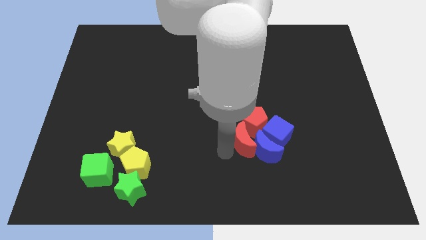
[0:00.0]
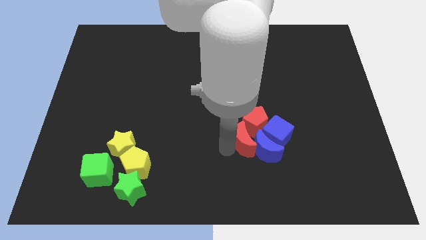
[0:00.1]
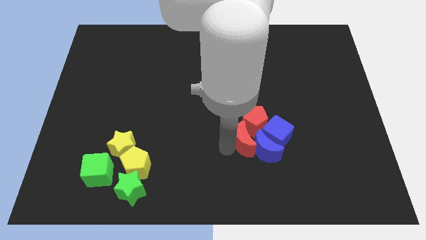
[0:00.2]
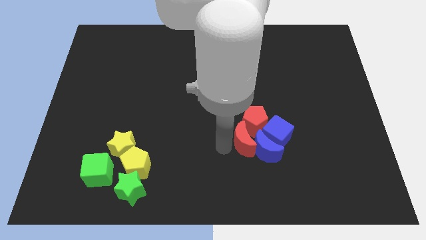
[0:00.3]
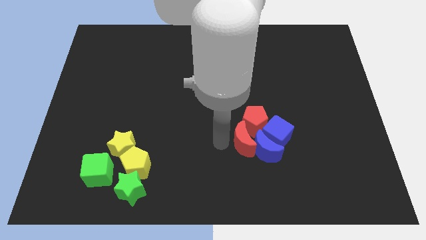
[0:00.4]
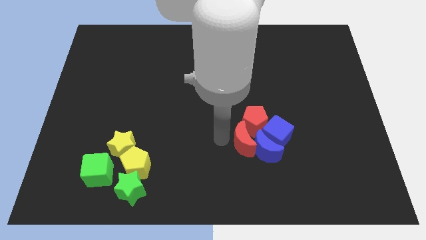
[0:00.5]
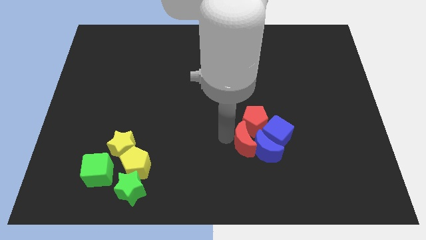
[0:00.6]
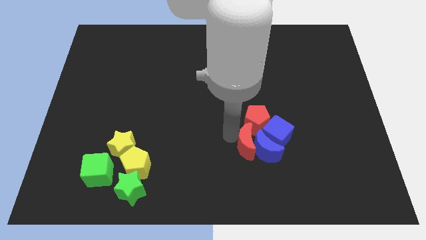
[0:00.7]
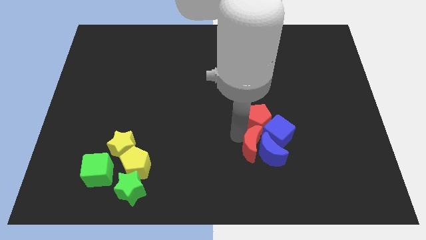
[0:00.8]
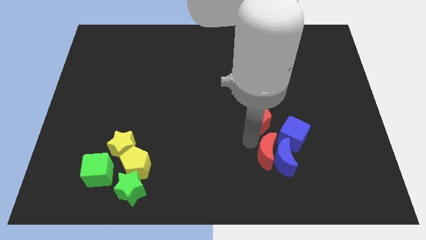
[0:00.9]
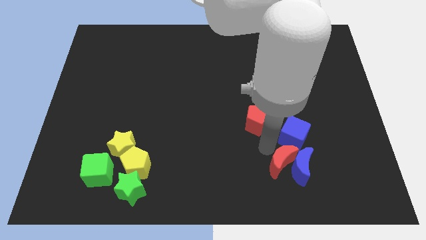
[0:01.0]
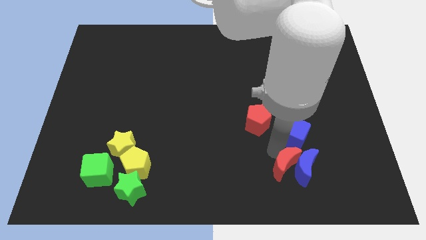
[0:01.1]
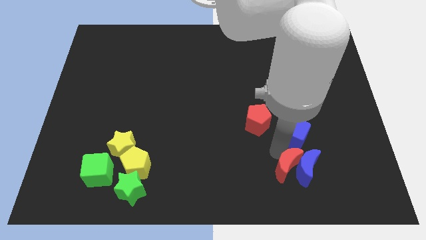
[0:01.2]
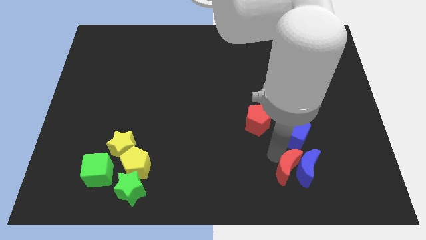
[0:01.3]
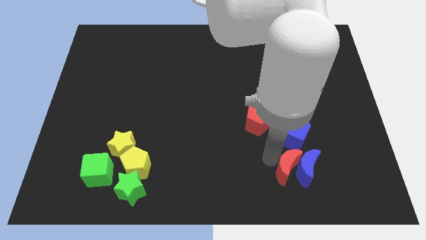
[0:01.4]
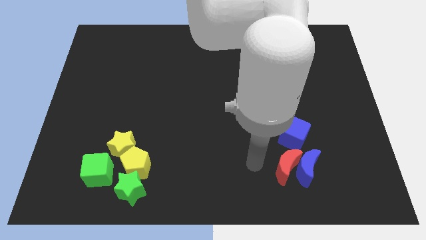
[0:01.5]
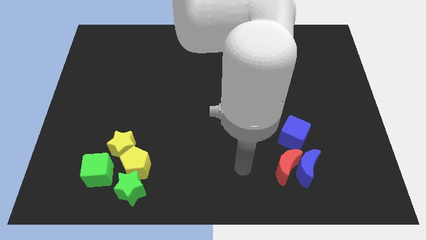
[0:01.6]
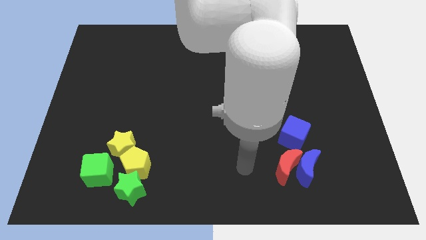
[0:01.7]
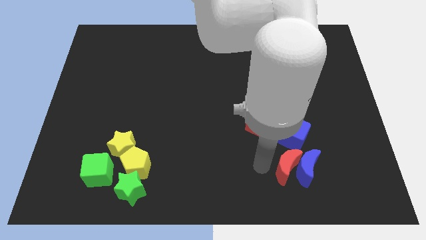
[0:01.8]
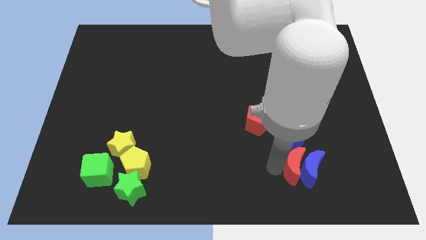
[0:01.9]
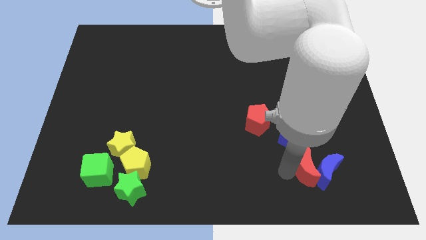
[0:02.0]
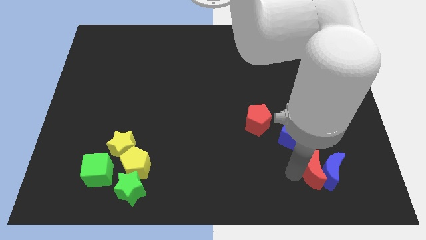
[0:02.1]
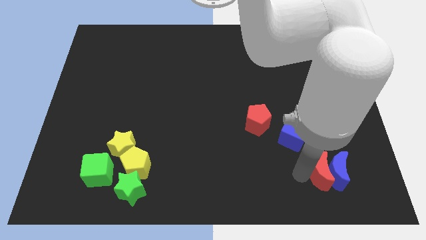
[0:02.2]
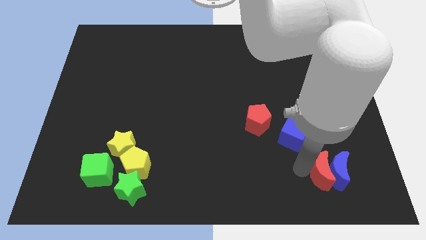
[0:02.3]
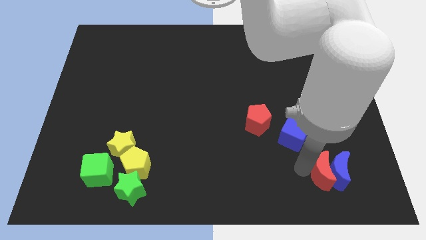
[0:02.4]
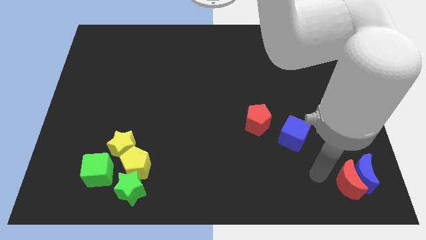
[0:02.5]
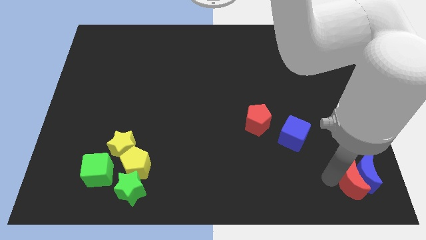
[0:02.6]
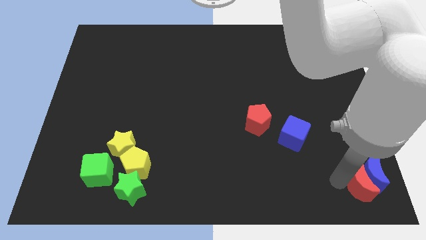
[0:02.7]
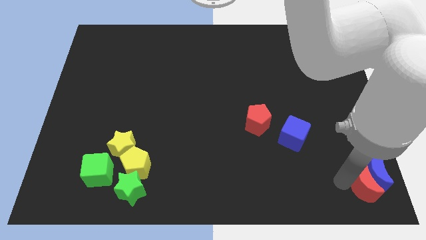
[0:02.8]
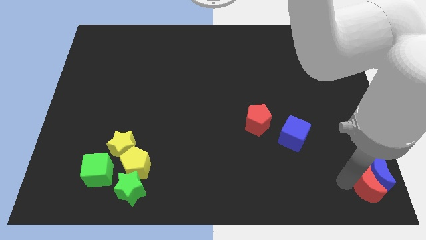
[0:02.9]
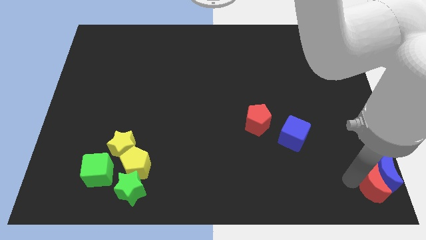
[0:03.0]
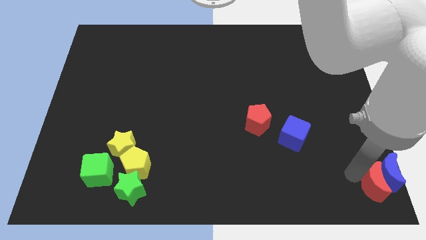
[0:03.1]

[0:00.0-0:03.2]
push crescents to the bottom right of the board

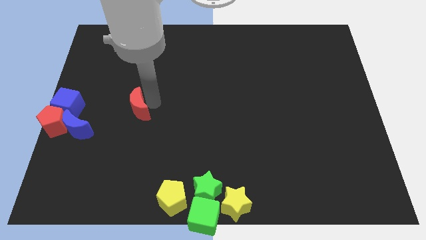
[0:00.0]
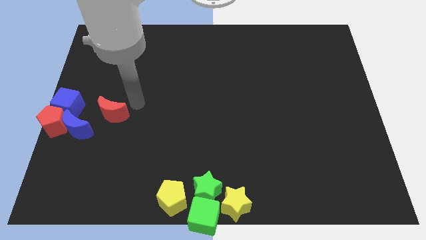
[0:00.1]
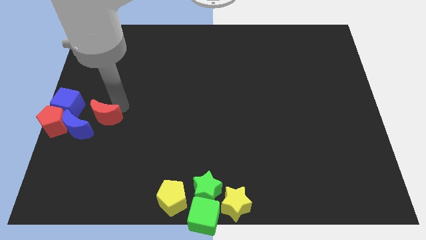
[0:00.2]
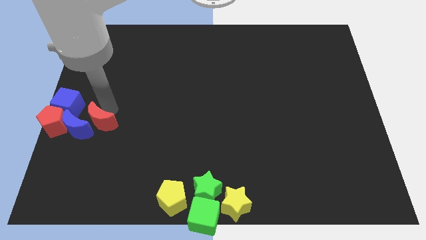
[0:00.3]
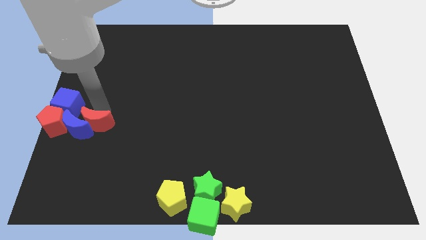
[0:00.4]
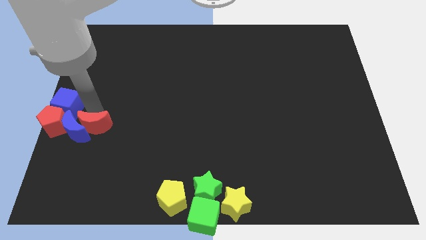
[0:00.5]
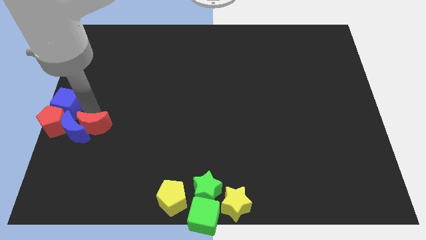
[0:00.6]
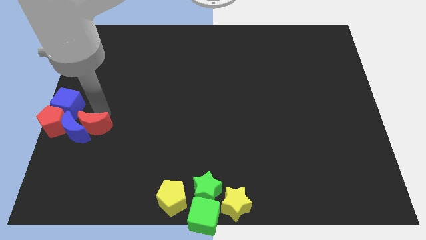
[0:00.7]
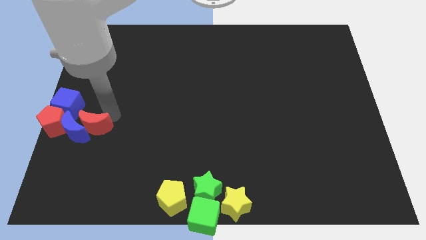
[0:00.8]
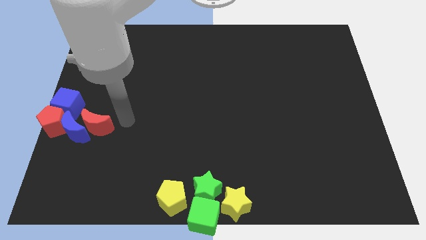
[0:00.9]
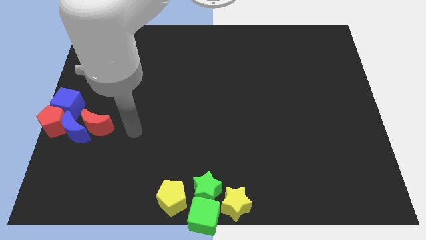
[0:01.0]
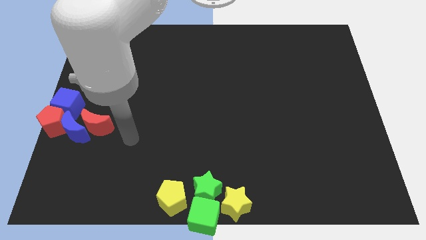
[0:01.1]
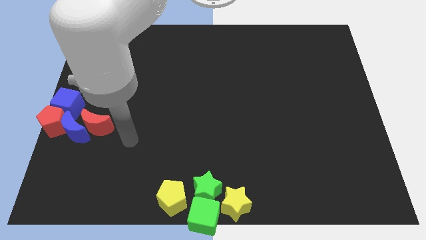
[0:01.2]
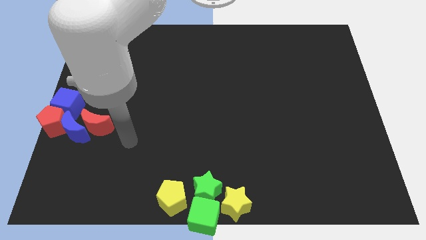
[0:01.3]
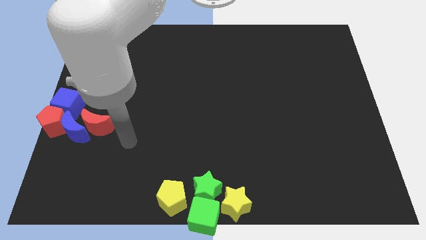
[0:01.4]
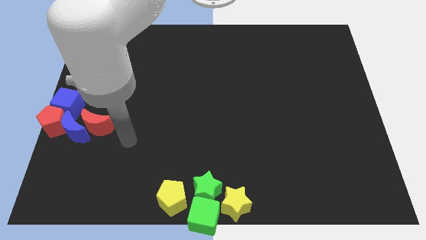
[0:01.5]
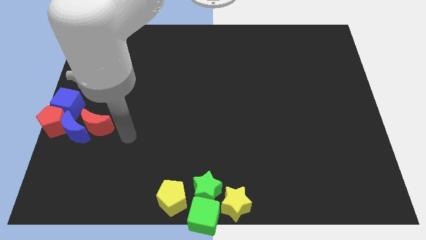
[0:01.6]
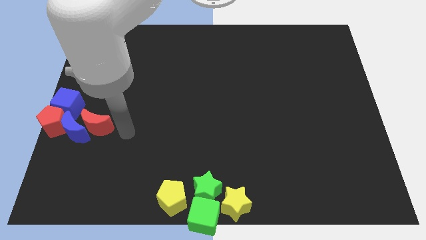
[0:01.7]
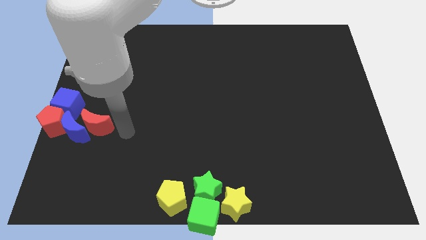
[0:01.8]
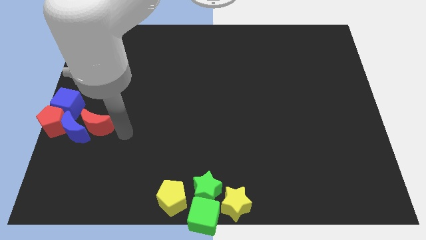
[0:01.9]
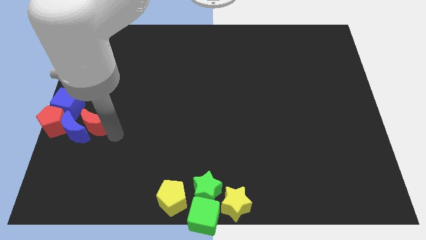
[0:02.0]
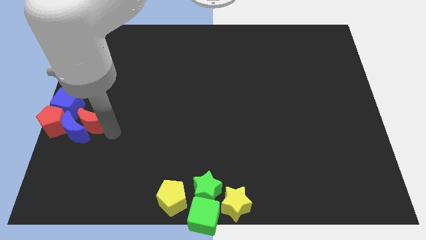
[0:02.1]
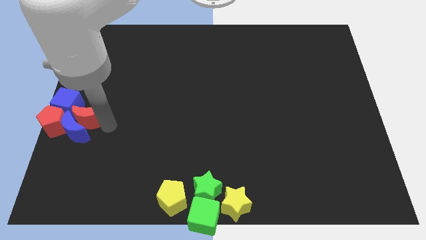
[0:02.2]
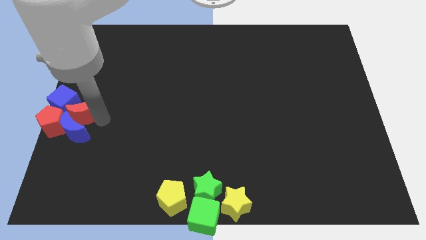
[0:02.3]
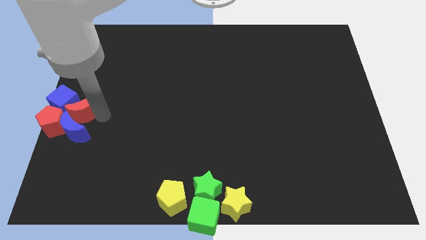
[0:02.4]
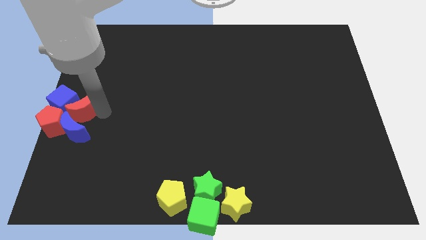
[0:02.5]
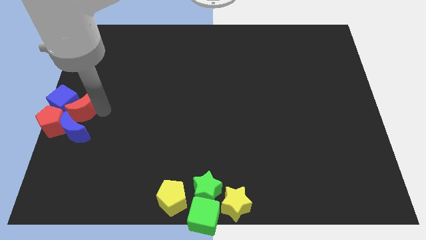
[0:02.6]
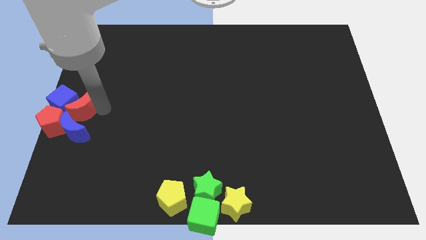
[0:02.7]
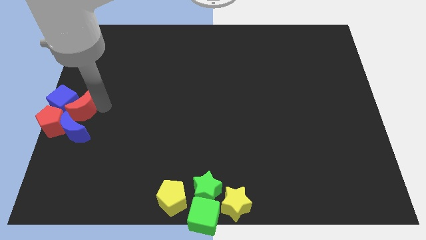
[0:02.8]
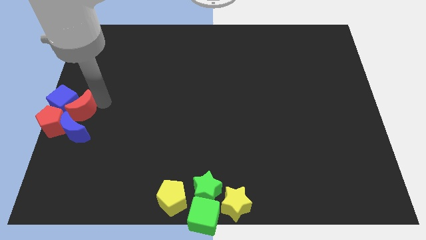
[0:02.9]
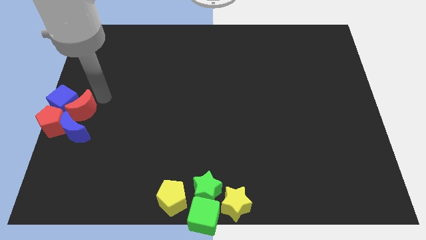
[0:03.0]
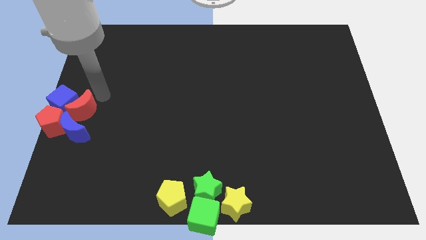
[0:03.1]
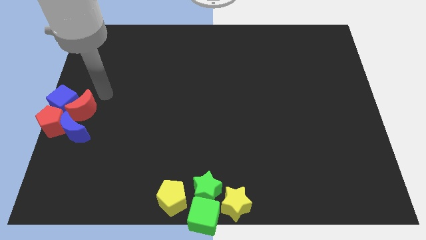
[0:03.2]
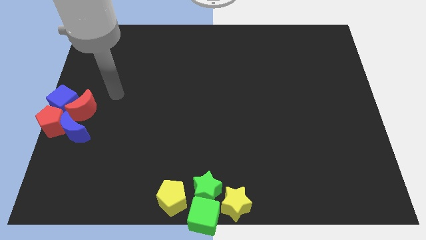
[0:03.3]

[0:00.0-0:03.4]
slide the red moon into a group of blocks

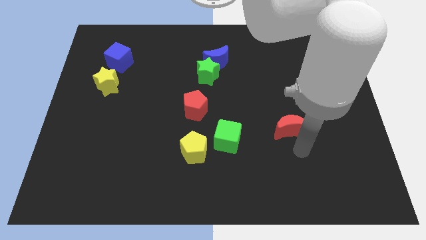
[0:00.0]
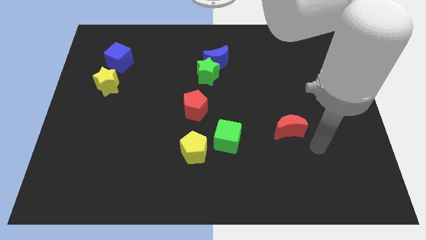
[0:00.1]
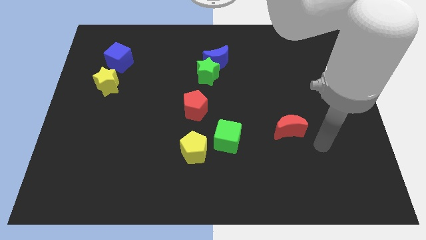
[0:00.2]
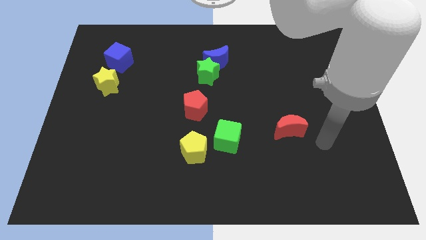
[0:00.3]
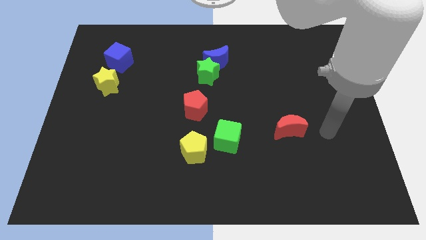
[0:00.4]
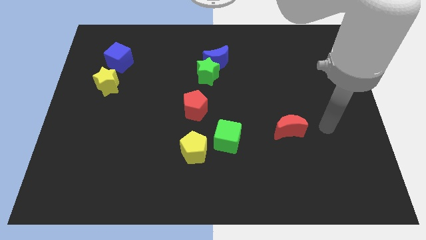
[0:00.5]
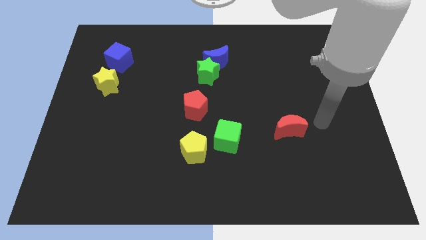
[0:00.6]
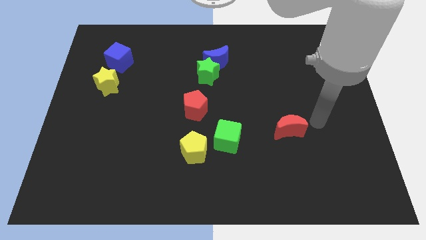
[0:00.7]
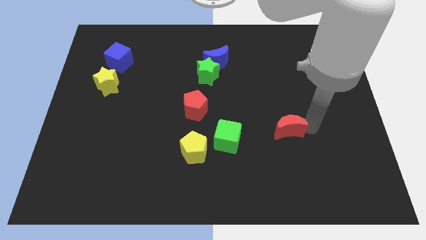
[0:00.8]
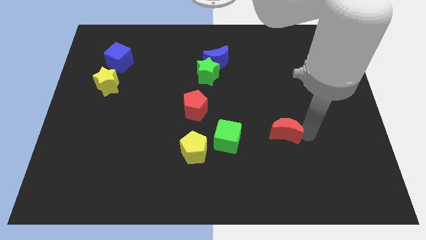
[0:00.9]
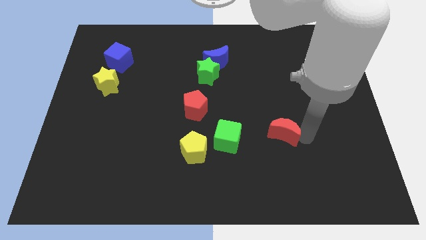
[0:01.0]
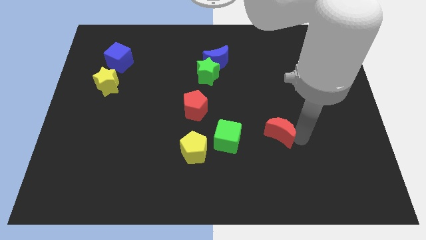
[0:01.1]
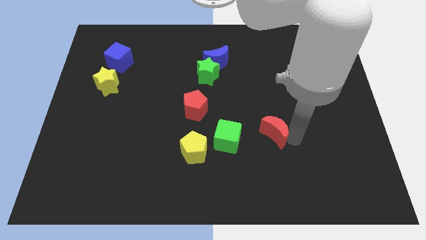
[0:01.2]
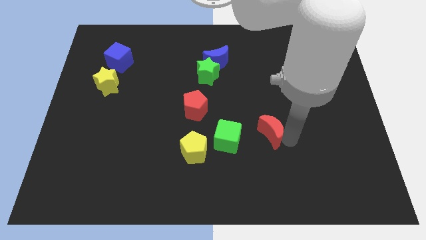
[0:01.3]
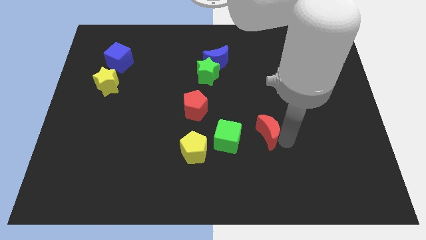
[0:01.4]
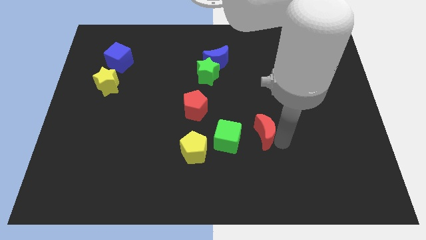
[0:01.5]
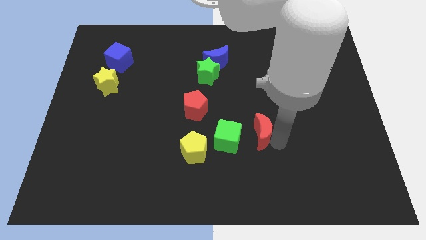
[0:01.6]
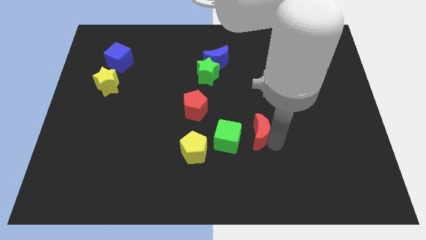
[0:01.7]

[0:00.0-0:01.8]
place red crescent right to green cube

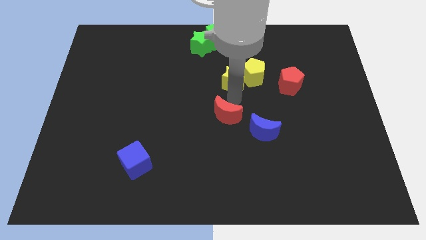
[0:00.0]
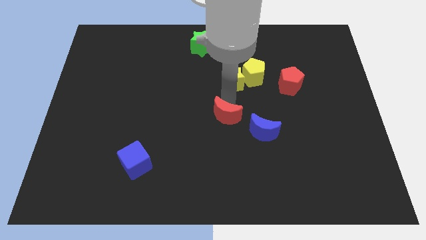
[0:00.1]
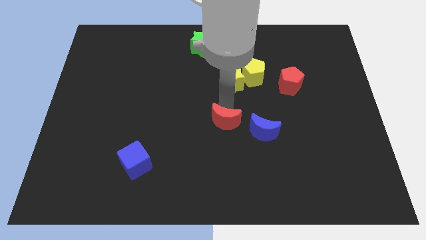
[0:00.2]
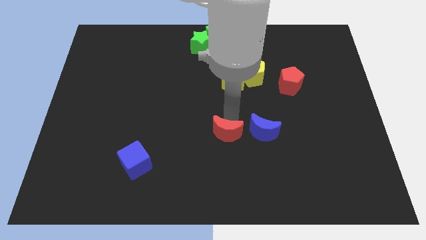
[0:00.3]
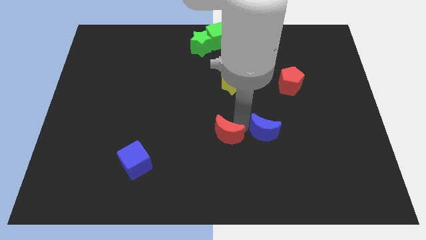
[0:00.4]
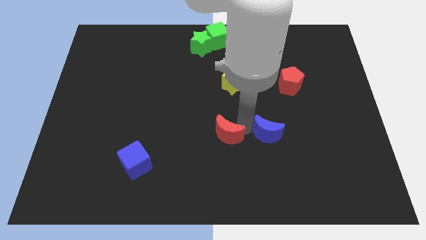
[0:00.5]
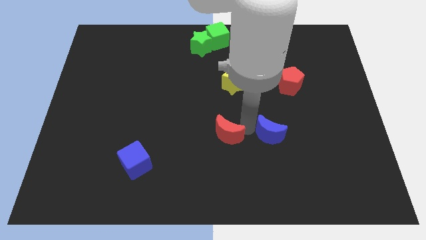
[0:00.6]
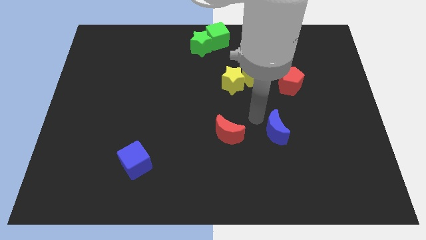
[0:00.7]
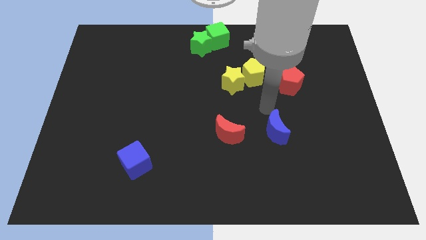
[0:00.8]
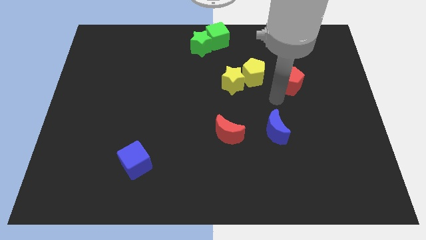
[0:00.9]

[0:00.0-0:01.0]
push red crescent slightly towards the bottom
